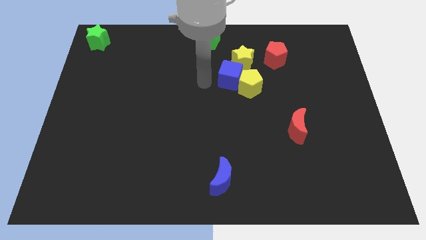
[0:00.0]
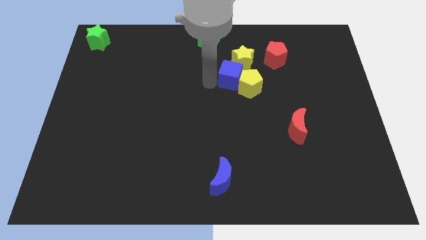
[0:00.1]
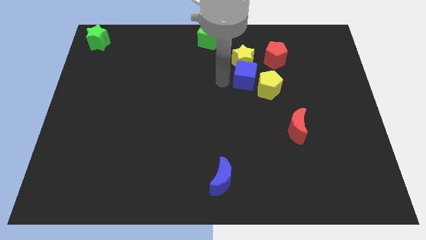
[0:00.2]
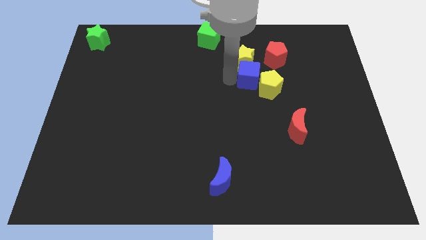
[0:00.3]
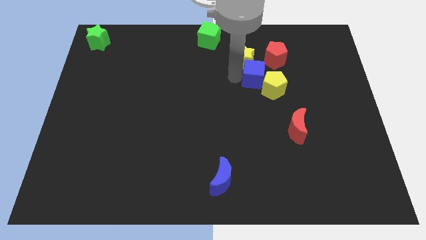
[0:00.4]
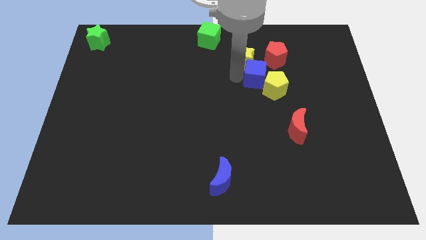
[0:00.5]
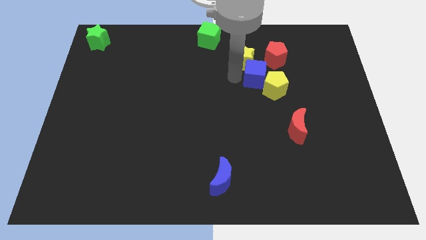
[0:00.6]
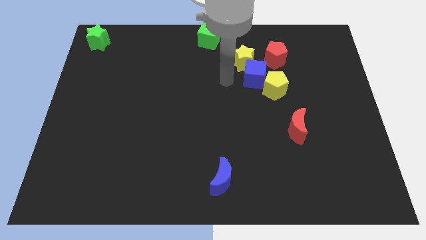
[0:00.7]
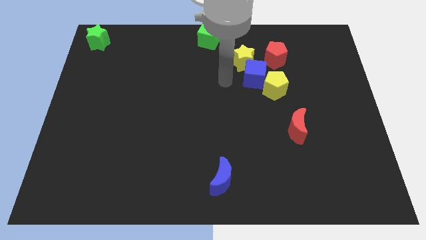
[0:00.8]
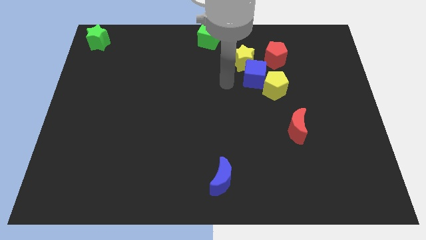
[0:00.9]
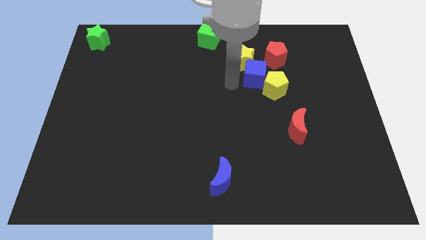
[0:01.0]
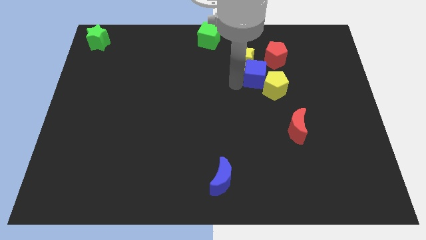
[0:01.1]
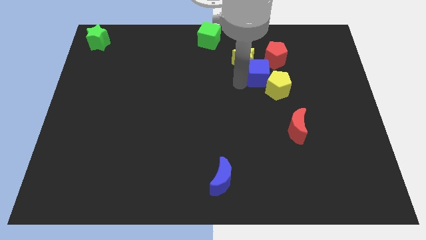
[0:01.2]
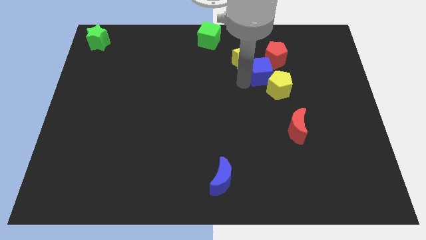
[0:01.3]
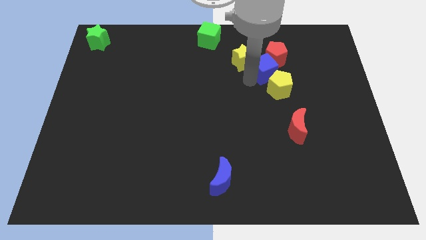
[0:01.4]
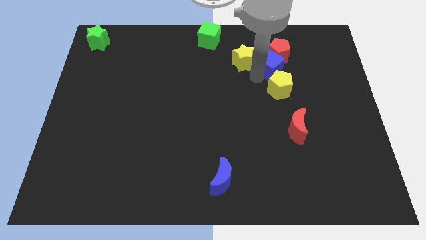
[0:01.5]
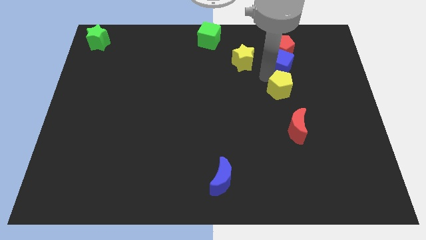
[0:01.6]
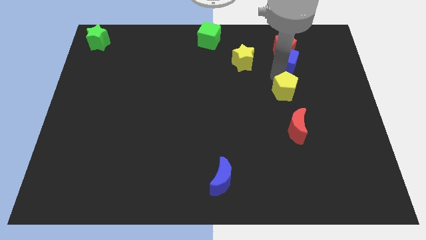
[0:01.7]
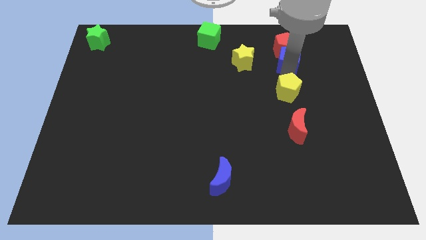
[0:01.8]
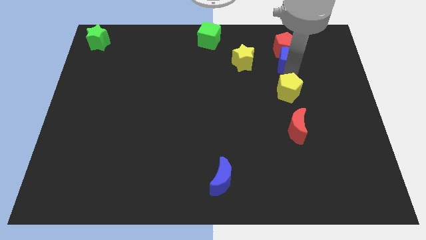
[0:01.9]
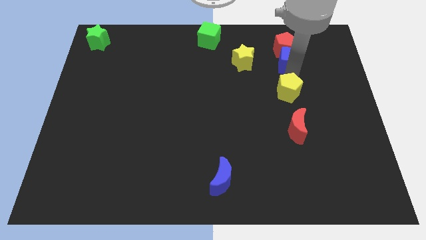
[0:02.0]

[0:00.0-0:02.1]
push the blue cube to the bottom side of the red pentagon

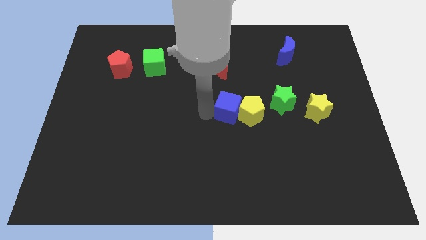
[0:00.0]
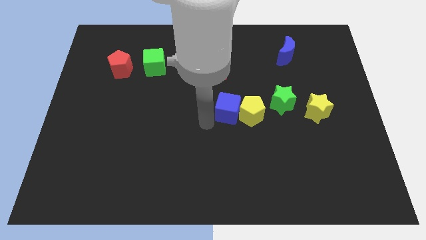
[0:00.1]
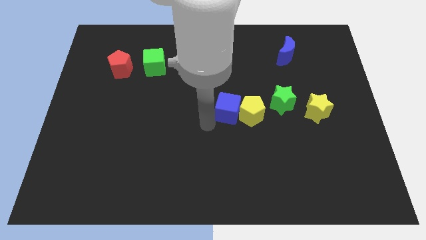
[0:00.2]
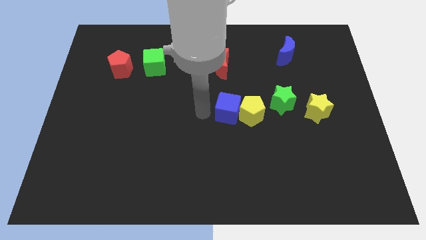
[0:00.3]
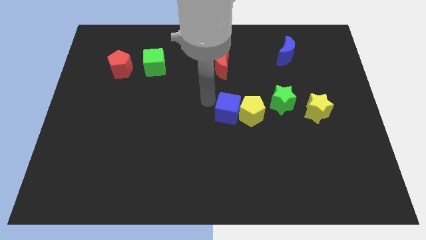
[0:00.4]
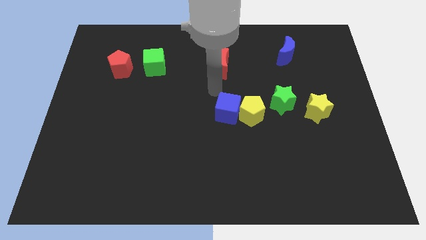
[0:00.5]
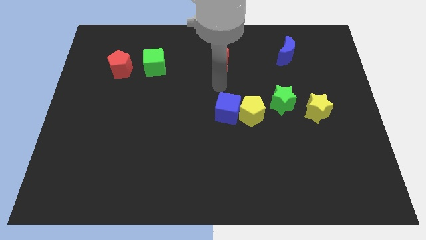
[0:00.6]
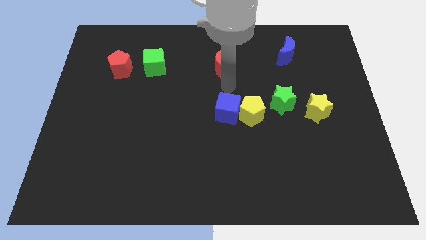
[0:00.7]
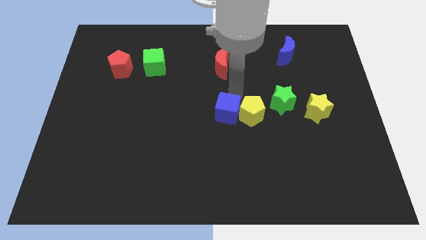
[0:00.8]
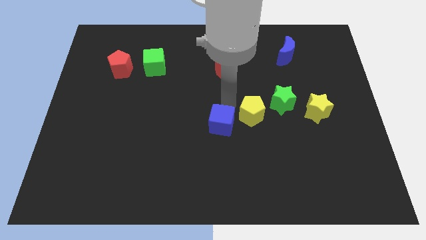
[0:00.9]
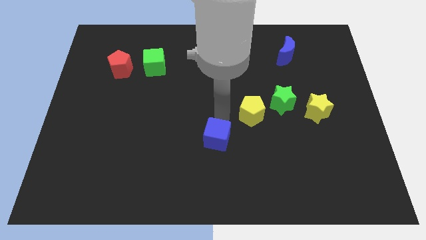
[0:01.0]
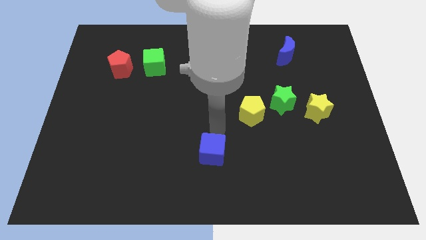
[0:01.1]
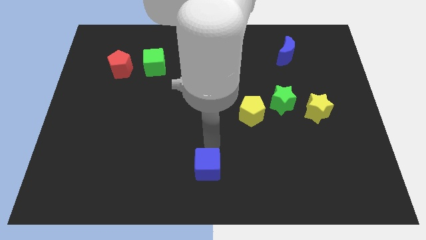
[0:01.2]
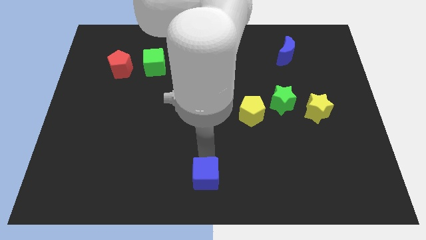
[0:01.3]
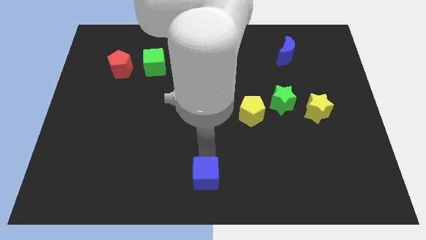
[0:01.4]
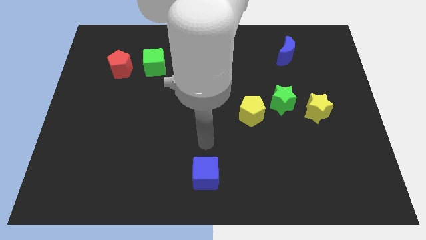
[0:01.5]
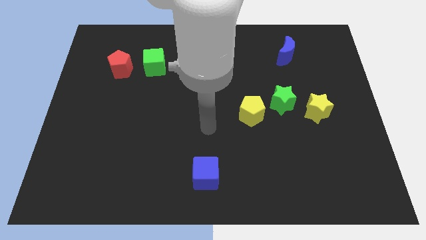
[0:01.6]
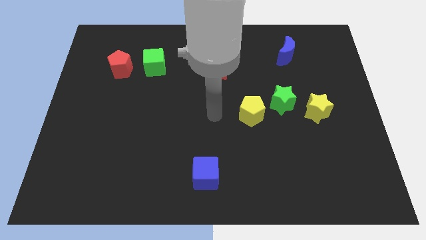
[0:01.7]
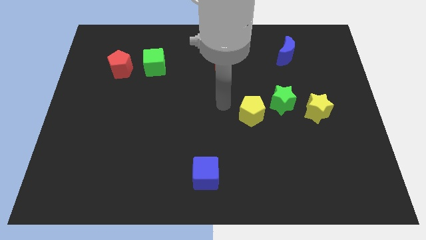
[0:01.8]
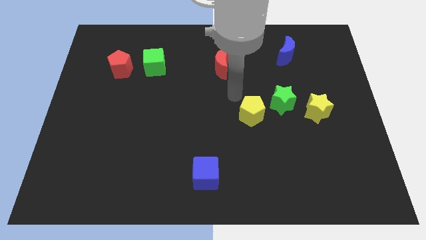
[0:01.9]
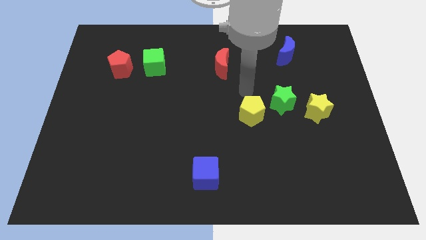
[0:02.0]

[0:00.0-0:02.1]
slide blue cube towards bottom center

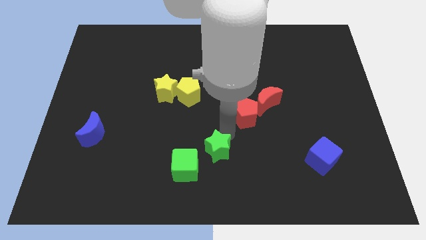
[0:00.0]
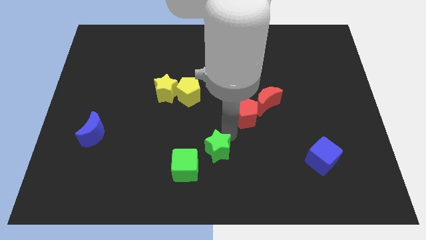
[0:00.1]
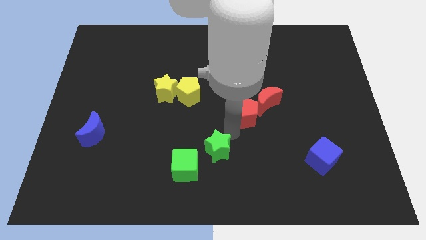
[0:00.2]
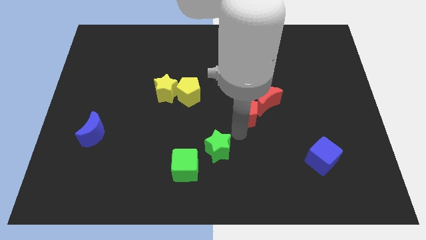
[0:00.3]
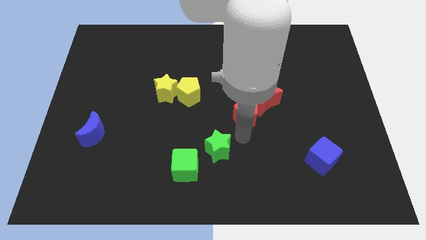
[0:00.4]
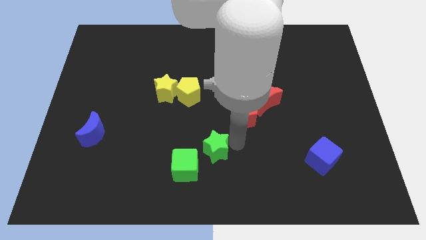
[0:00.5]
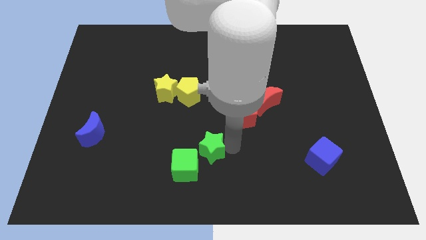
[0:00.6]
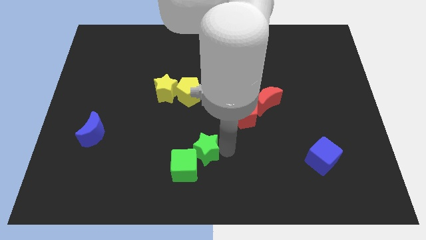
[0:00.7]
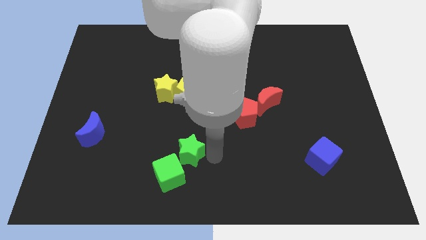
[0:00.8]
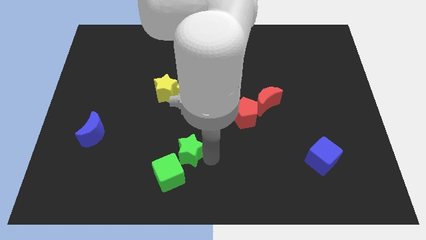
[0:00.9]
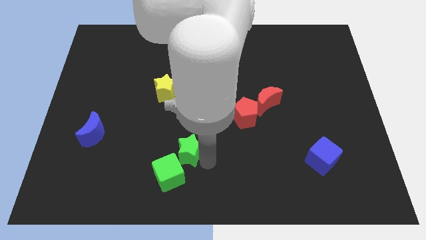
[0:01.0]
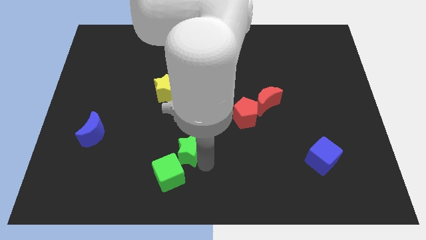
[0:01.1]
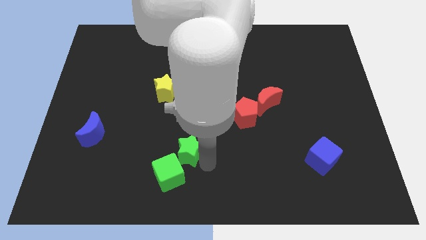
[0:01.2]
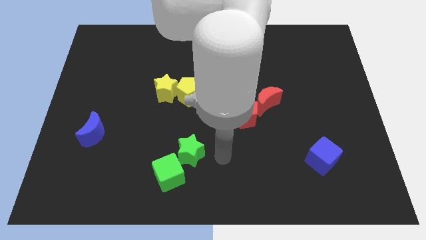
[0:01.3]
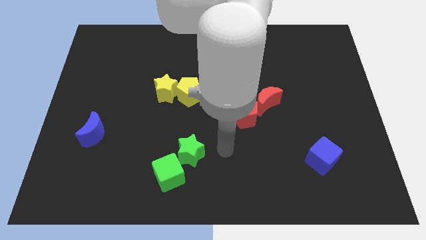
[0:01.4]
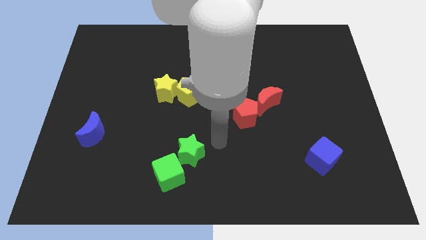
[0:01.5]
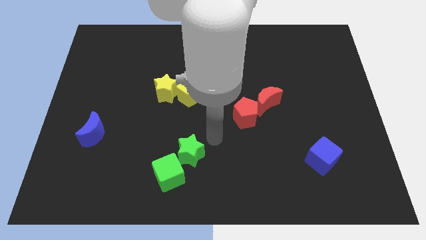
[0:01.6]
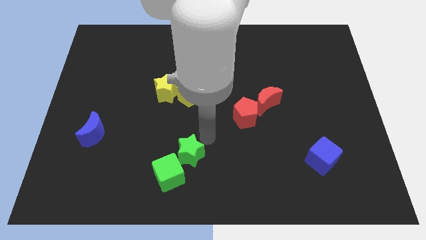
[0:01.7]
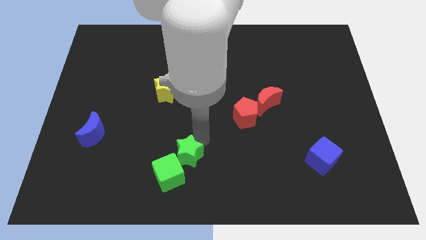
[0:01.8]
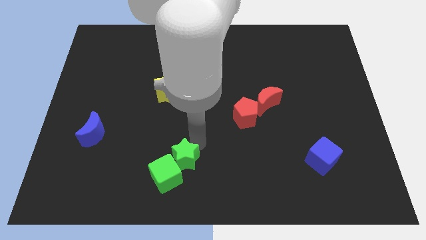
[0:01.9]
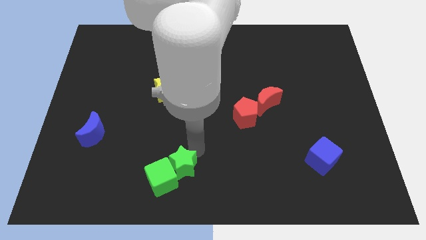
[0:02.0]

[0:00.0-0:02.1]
push the green cube with green star

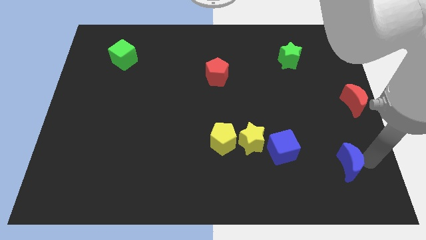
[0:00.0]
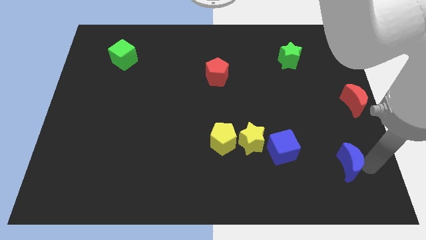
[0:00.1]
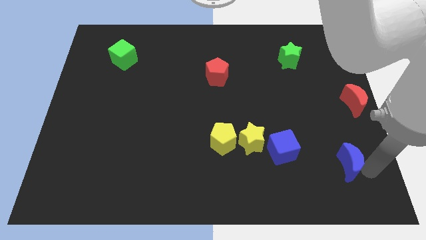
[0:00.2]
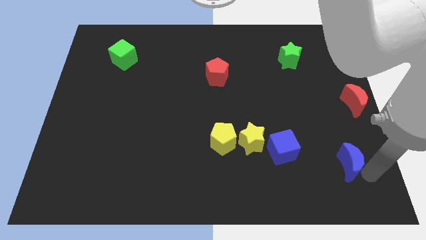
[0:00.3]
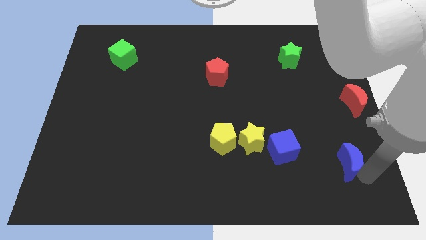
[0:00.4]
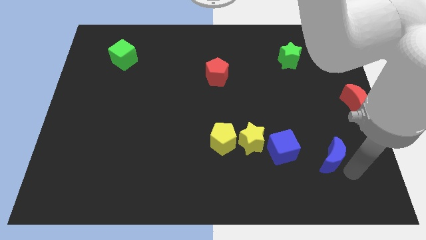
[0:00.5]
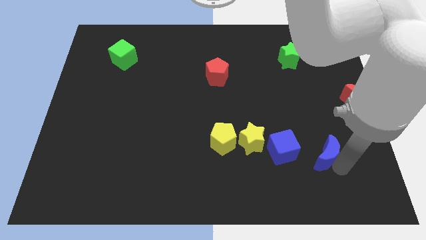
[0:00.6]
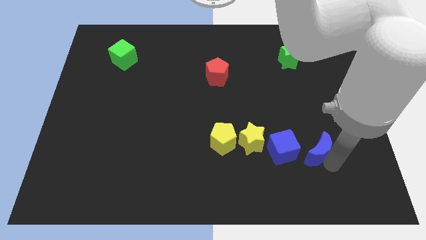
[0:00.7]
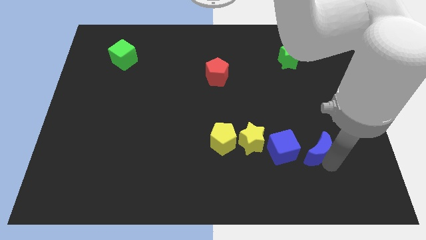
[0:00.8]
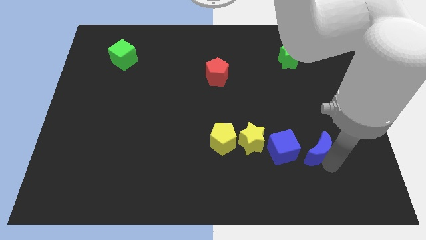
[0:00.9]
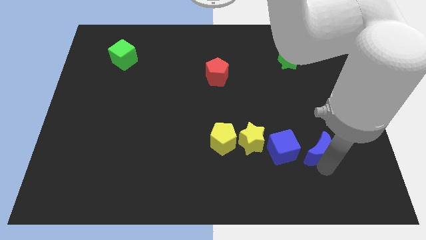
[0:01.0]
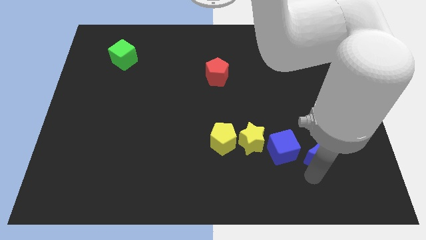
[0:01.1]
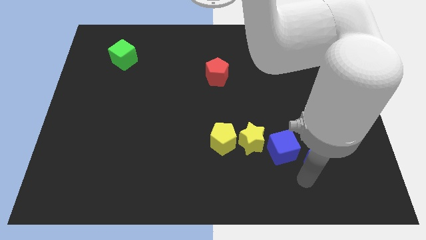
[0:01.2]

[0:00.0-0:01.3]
move the blue crescent right to the blue cube

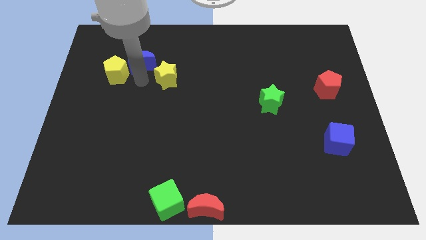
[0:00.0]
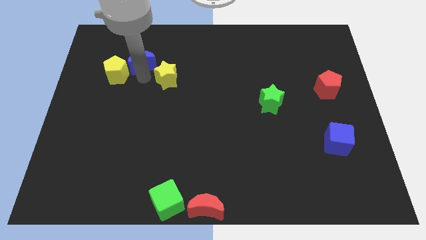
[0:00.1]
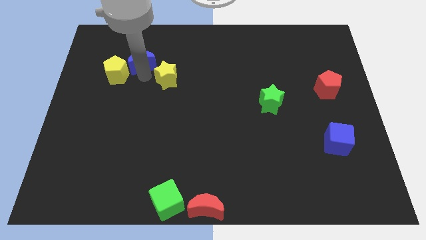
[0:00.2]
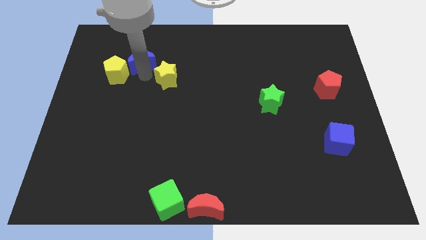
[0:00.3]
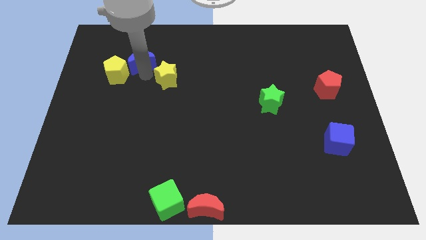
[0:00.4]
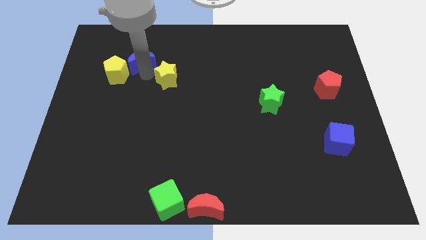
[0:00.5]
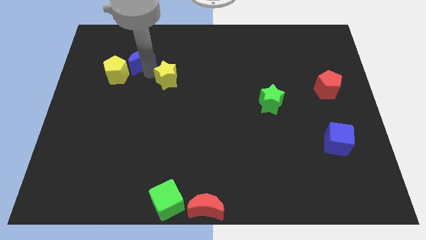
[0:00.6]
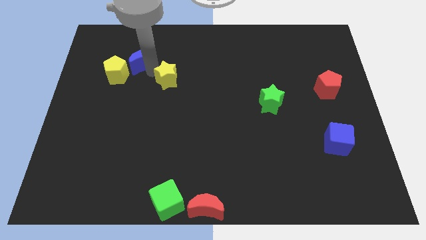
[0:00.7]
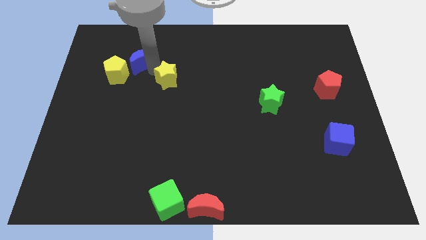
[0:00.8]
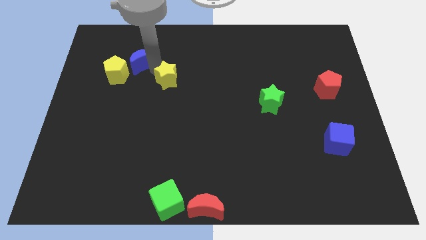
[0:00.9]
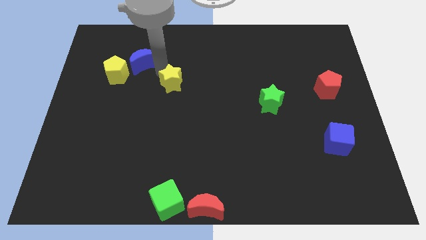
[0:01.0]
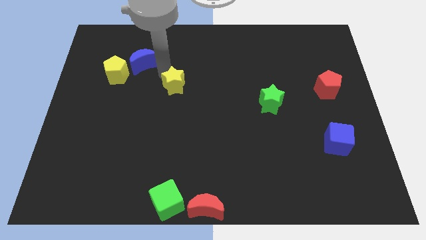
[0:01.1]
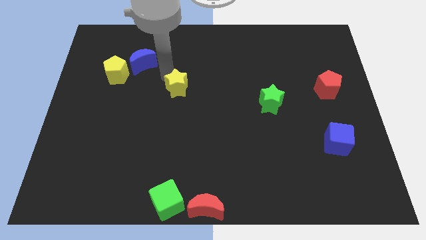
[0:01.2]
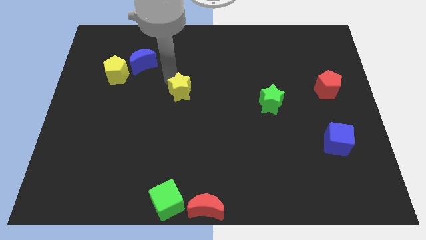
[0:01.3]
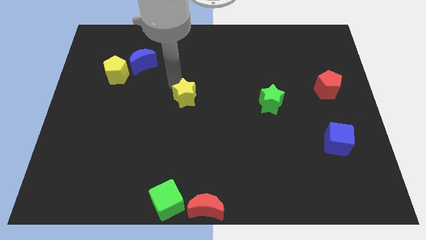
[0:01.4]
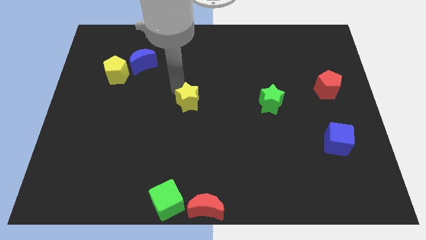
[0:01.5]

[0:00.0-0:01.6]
move the yellow star away away from the blue crescent
